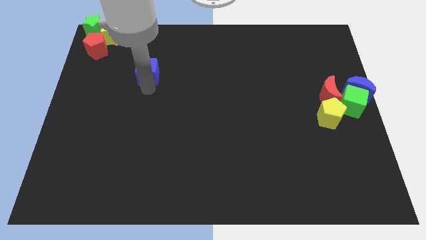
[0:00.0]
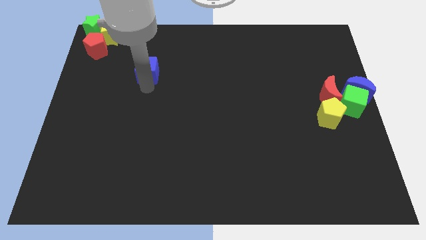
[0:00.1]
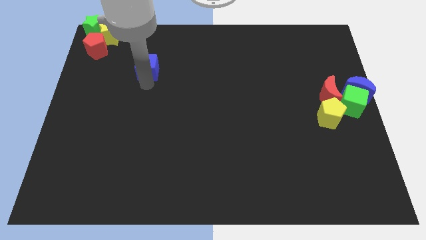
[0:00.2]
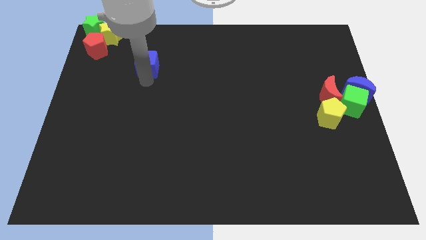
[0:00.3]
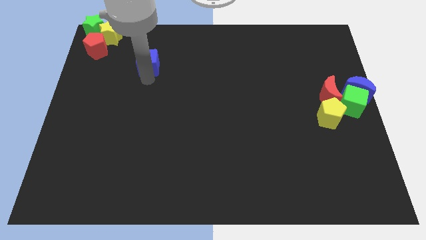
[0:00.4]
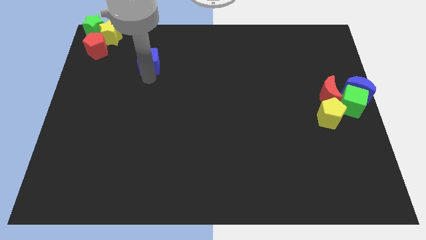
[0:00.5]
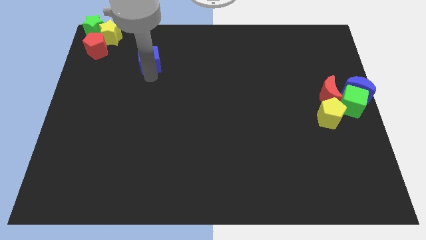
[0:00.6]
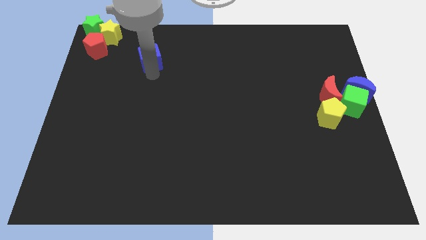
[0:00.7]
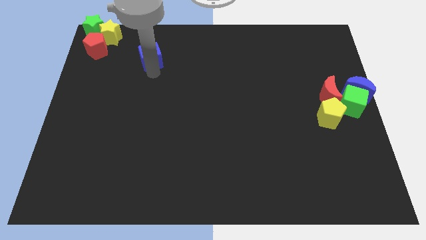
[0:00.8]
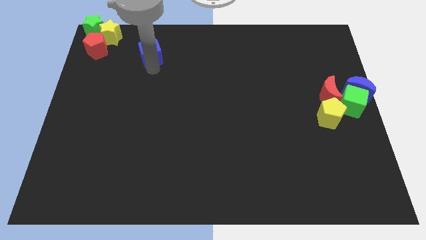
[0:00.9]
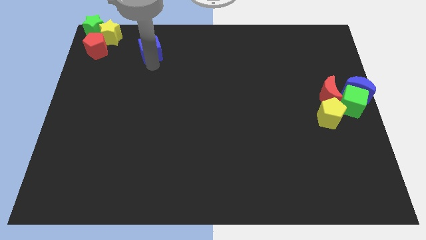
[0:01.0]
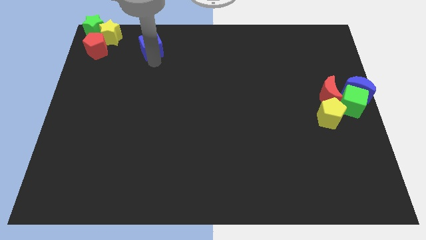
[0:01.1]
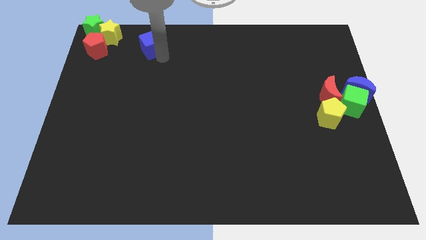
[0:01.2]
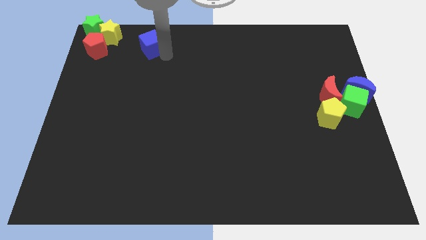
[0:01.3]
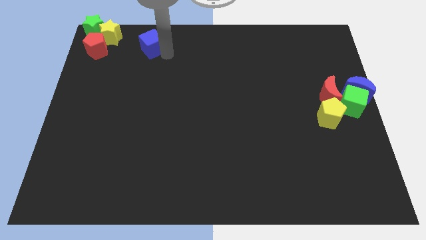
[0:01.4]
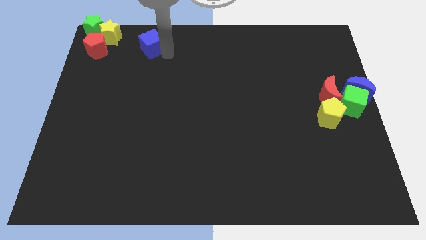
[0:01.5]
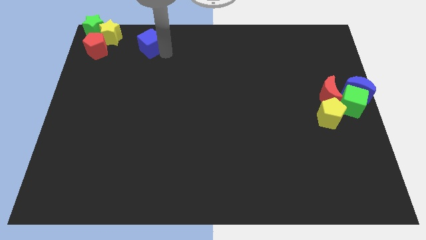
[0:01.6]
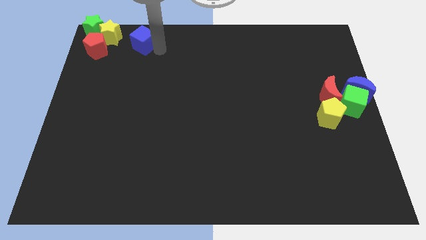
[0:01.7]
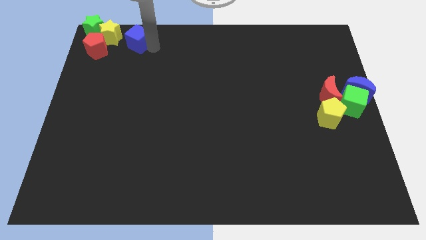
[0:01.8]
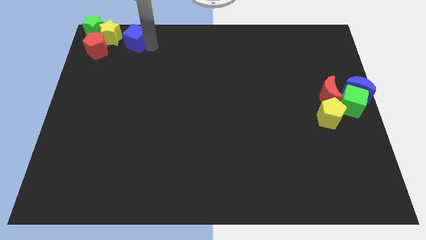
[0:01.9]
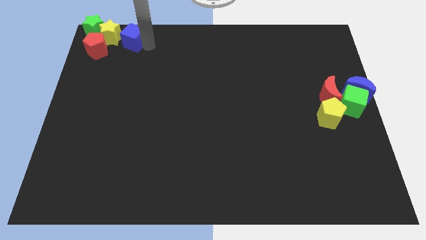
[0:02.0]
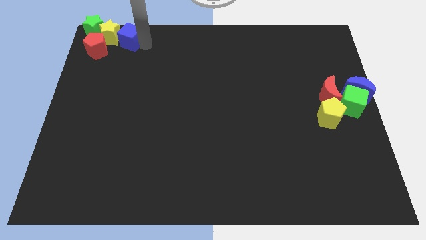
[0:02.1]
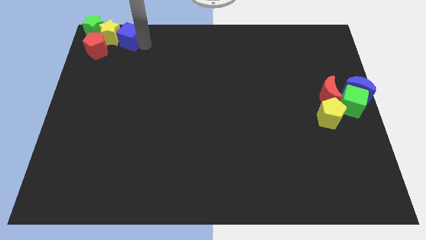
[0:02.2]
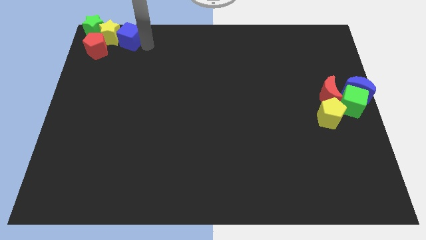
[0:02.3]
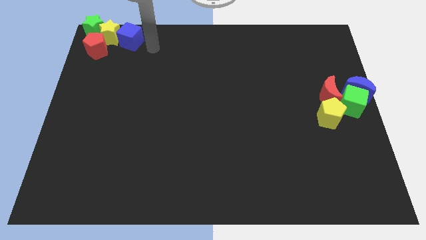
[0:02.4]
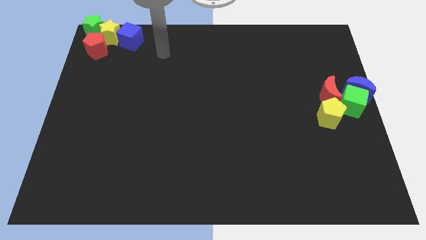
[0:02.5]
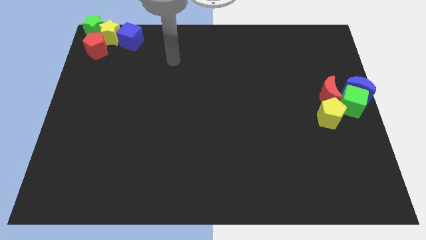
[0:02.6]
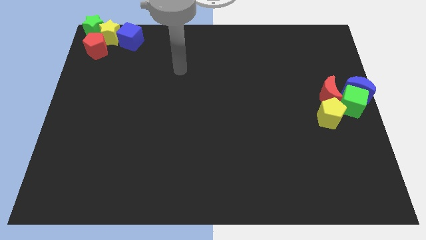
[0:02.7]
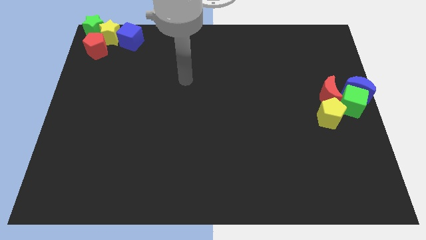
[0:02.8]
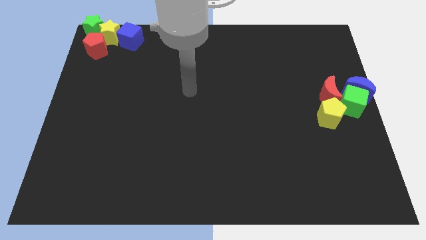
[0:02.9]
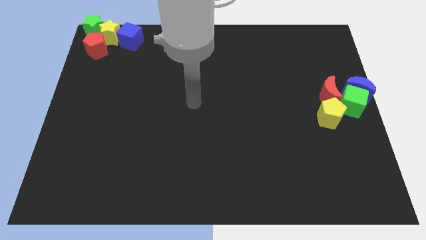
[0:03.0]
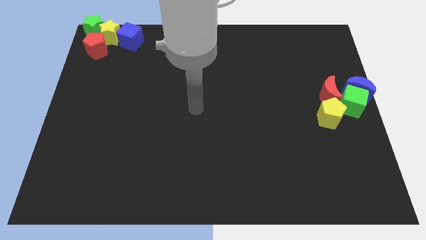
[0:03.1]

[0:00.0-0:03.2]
place the blue cube to the right of the yellow star

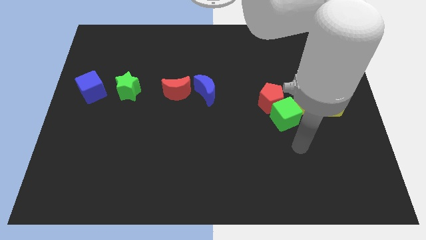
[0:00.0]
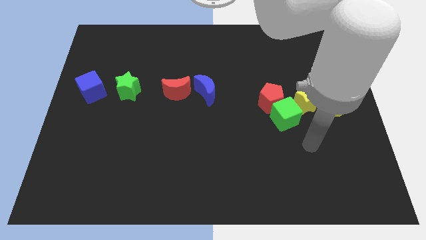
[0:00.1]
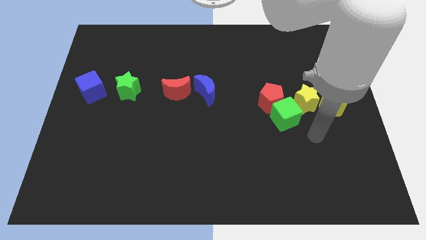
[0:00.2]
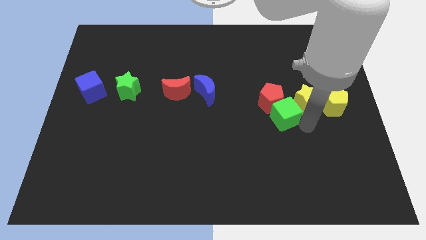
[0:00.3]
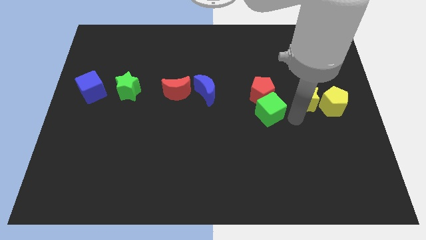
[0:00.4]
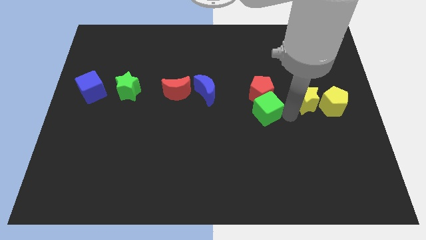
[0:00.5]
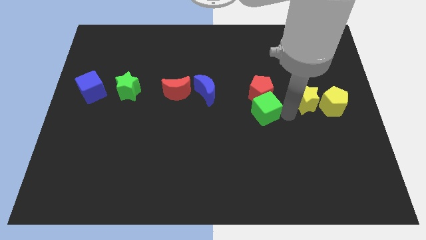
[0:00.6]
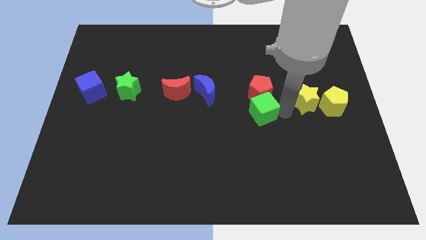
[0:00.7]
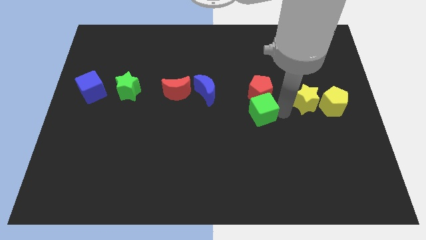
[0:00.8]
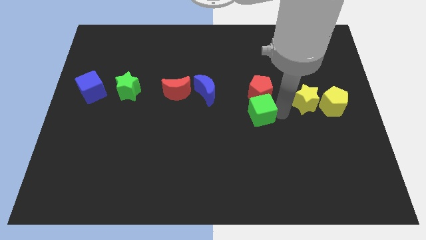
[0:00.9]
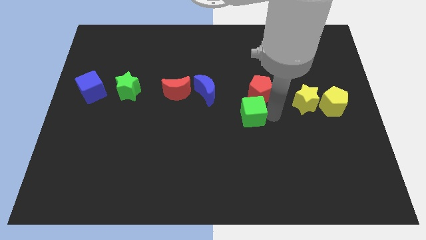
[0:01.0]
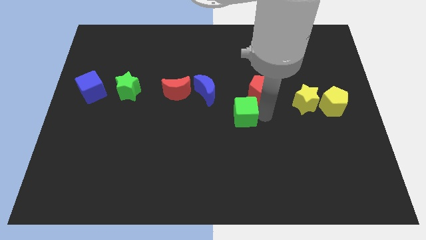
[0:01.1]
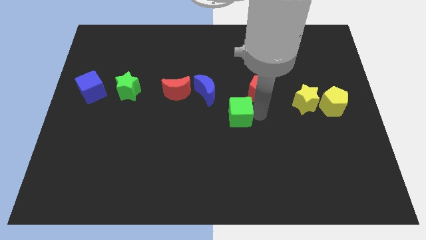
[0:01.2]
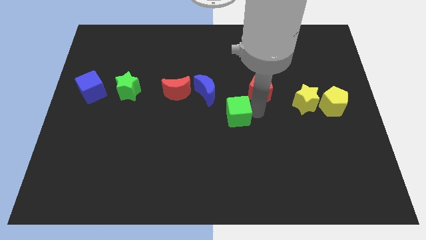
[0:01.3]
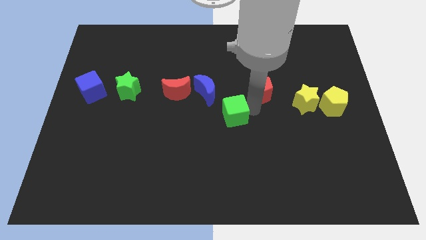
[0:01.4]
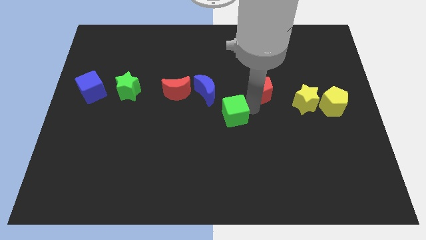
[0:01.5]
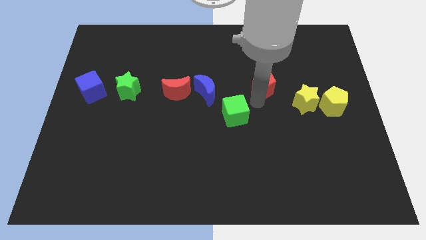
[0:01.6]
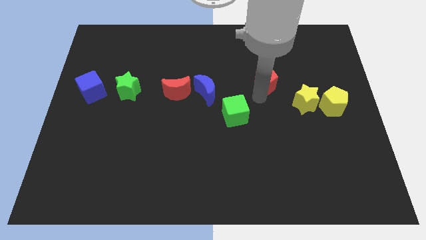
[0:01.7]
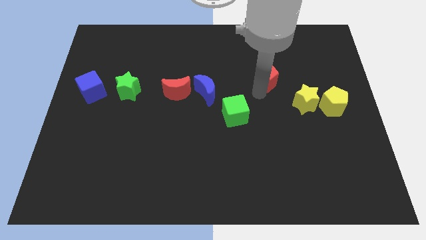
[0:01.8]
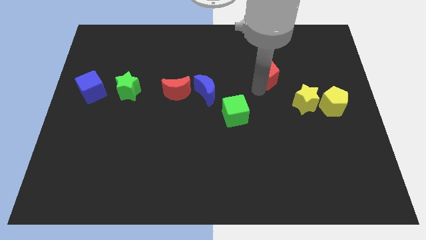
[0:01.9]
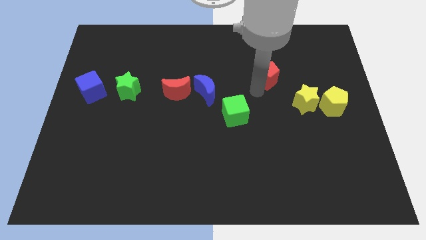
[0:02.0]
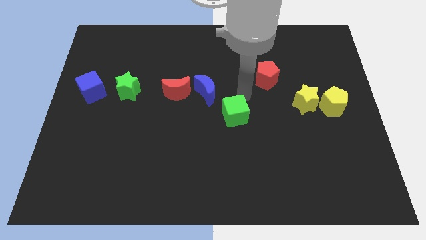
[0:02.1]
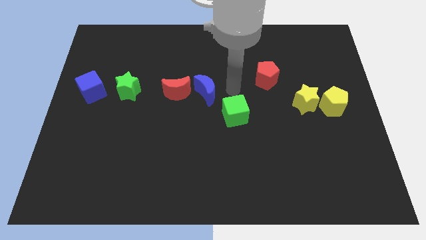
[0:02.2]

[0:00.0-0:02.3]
separate the red pentagon and green cube from each other

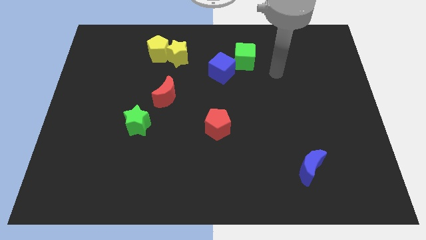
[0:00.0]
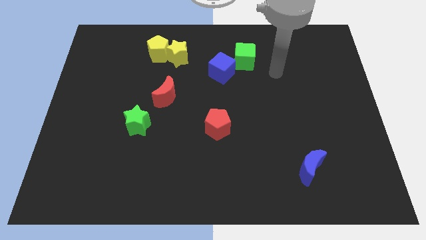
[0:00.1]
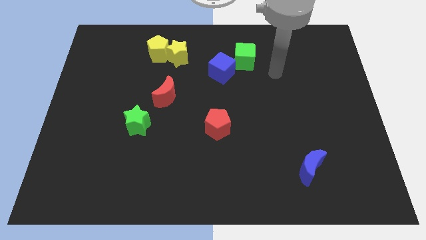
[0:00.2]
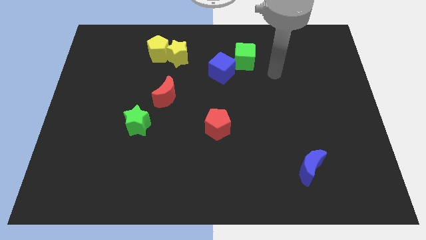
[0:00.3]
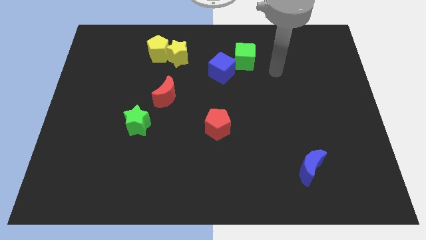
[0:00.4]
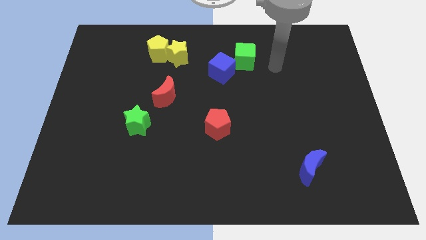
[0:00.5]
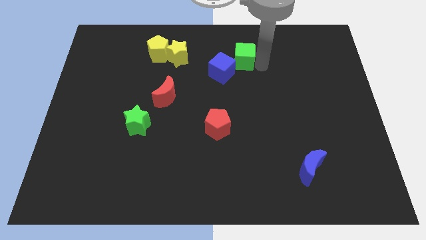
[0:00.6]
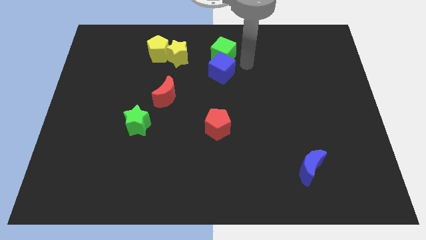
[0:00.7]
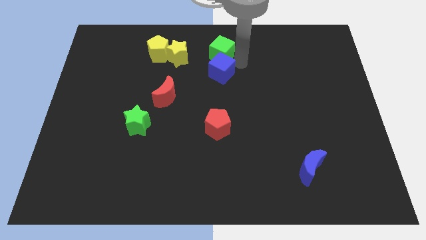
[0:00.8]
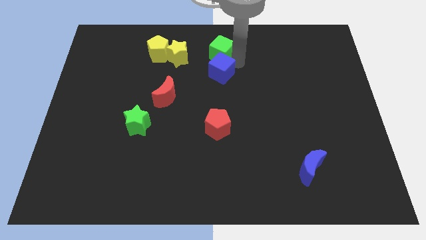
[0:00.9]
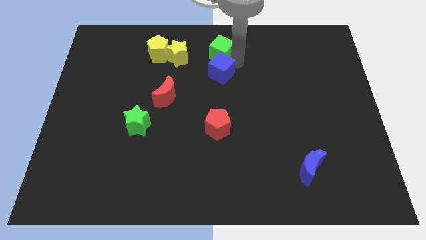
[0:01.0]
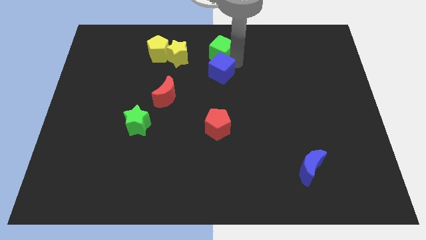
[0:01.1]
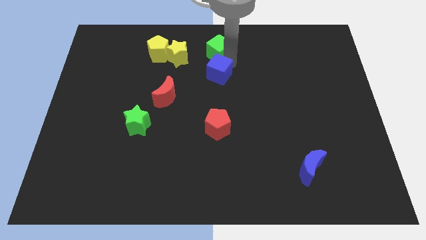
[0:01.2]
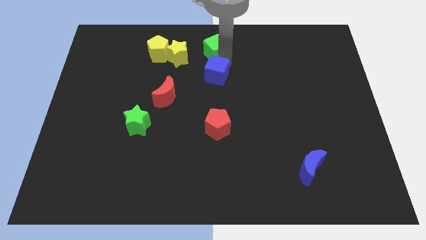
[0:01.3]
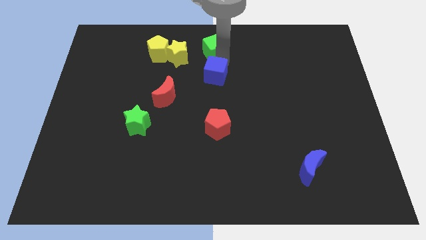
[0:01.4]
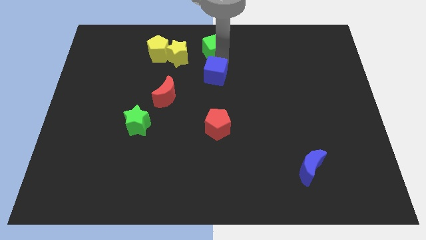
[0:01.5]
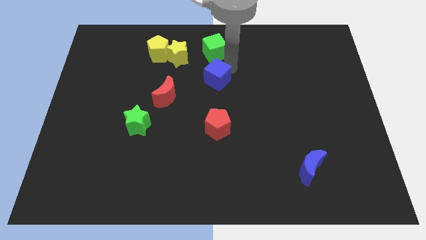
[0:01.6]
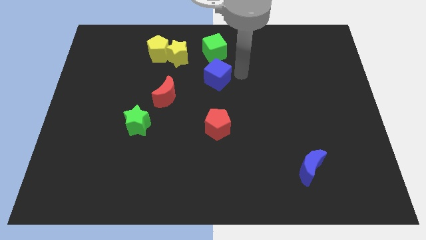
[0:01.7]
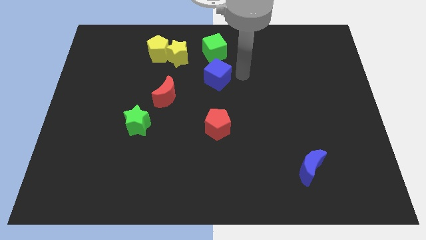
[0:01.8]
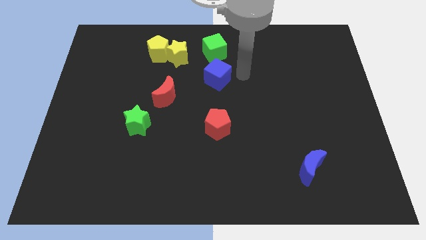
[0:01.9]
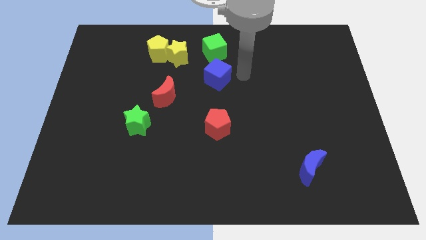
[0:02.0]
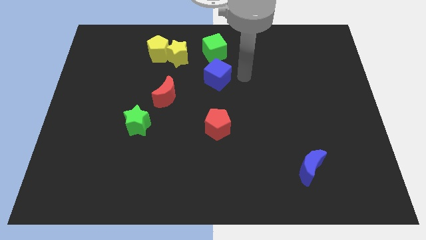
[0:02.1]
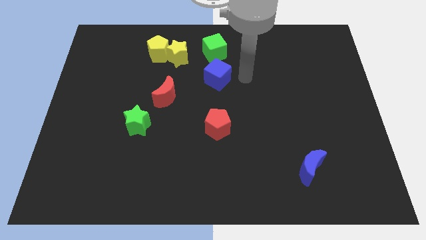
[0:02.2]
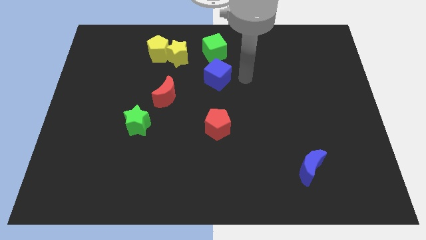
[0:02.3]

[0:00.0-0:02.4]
place green cube on top of blue cube

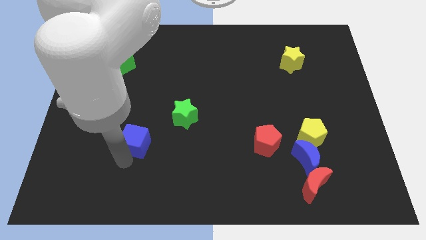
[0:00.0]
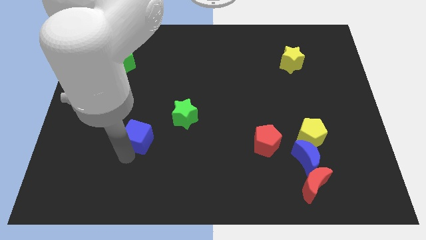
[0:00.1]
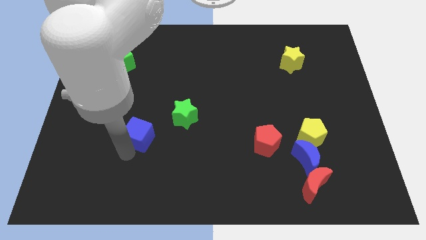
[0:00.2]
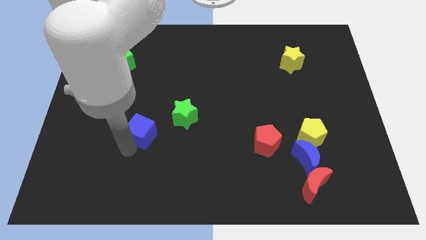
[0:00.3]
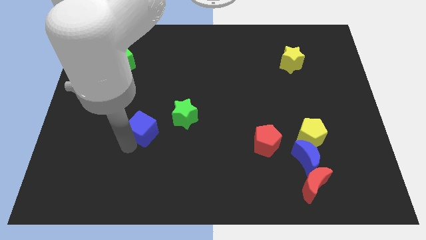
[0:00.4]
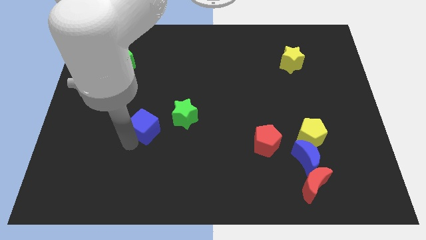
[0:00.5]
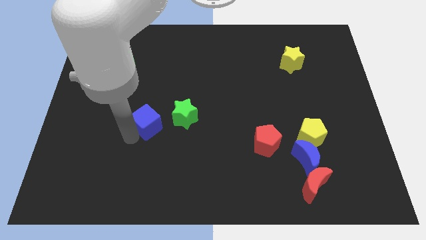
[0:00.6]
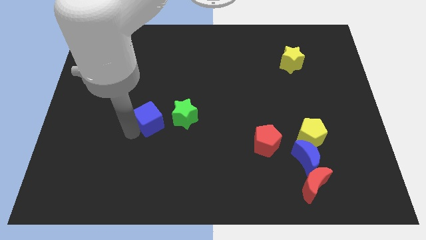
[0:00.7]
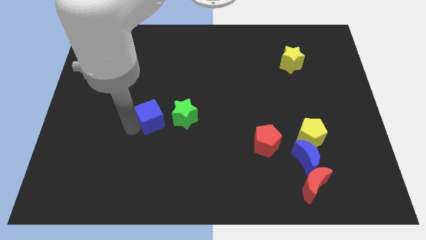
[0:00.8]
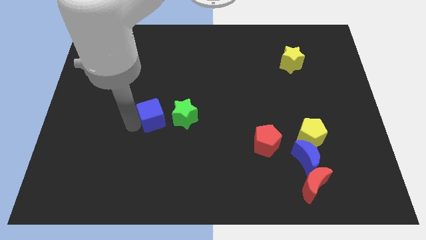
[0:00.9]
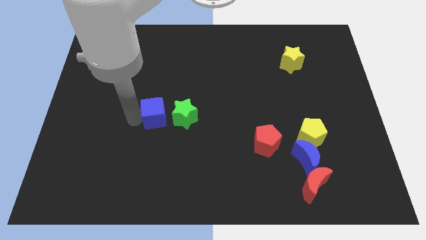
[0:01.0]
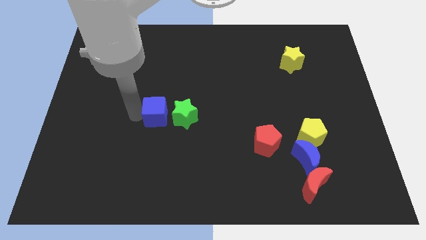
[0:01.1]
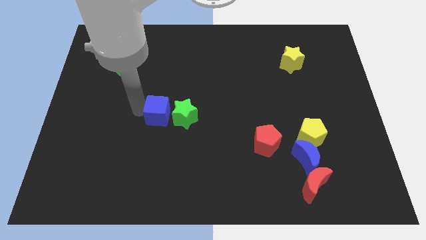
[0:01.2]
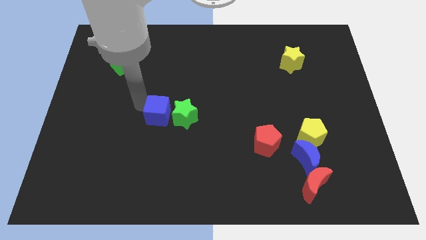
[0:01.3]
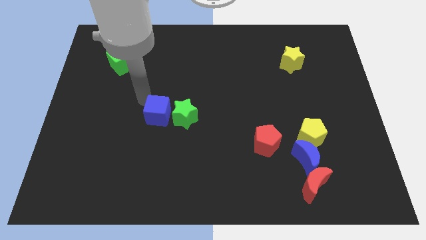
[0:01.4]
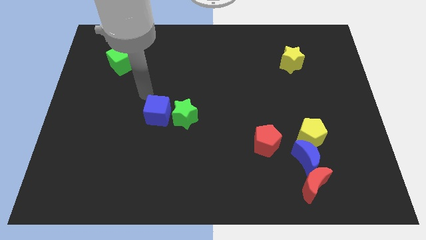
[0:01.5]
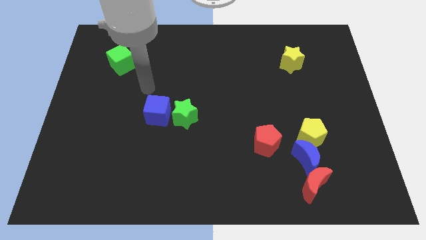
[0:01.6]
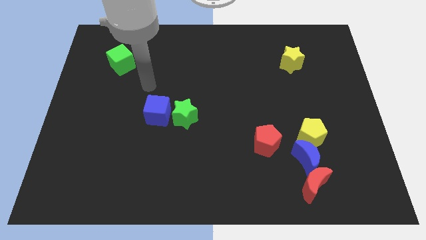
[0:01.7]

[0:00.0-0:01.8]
place the blue cube to the left of the green star
